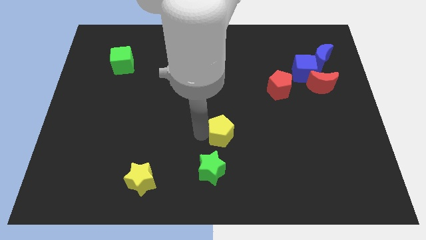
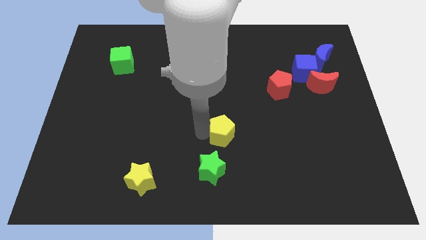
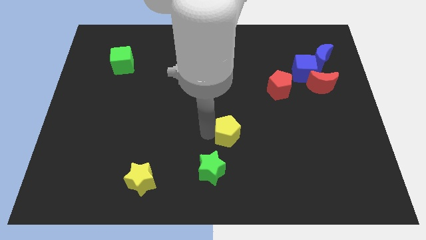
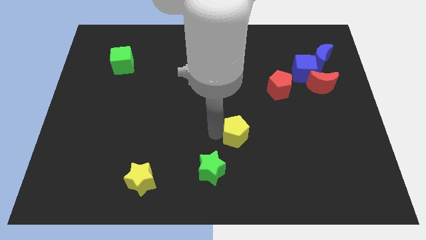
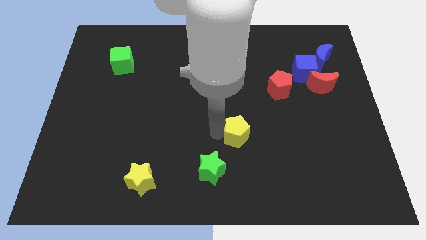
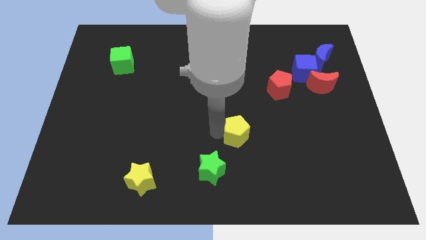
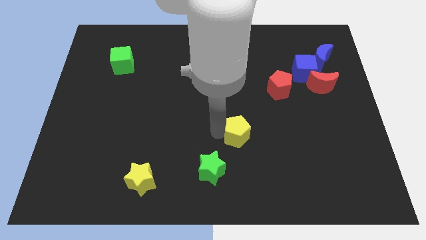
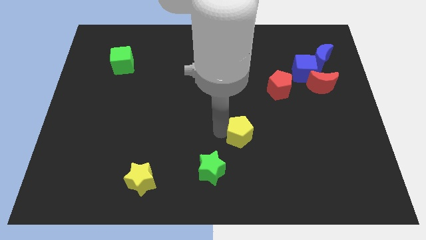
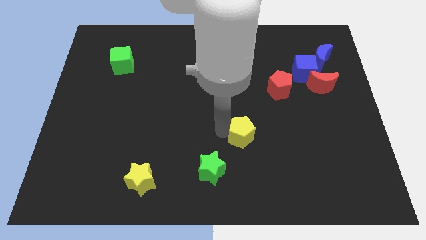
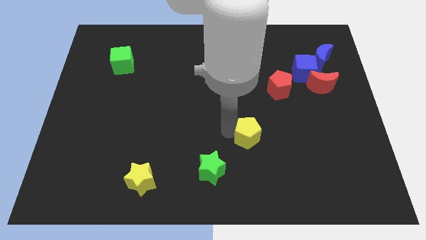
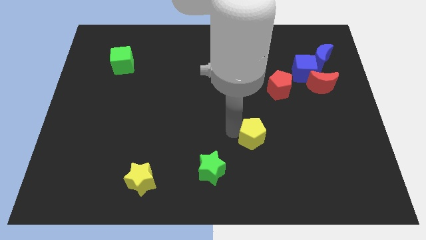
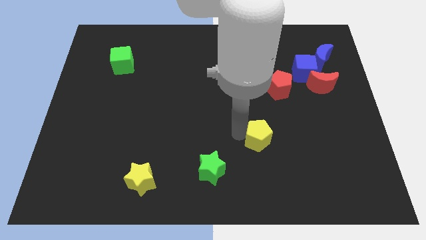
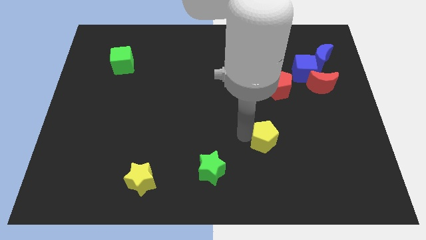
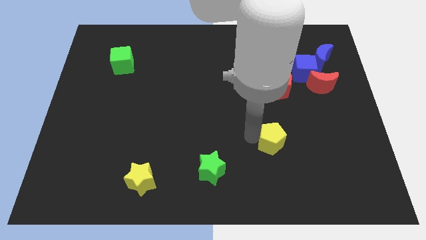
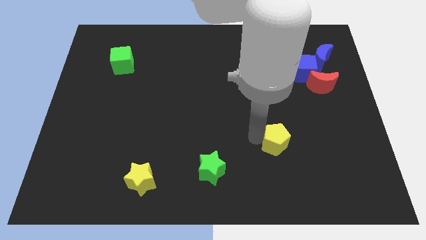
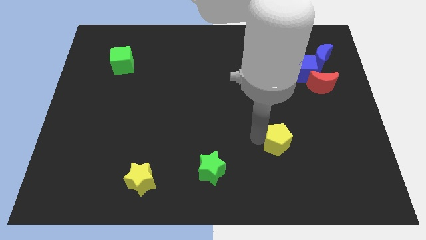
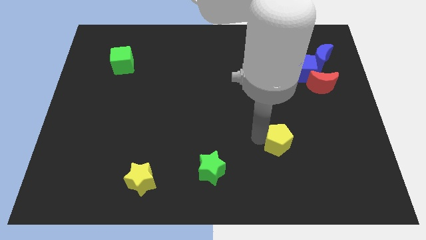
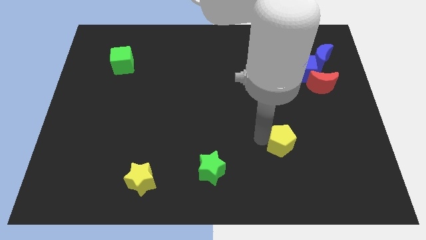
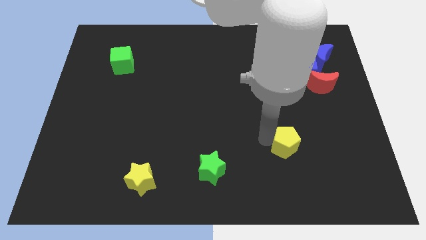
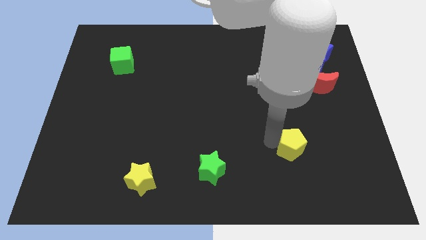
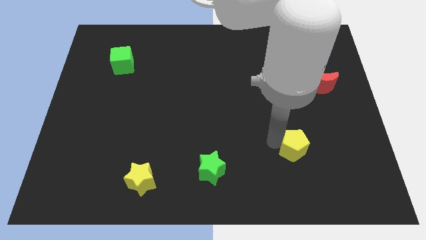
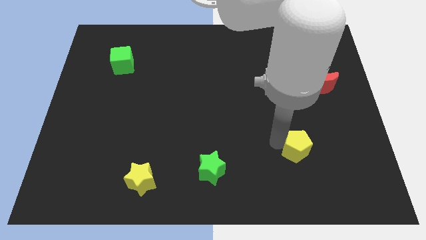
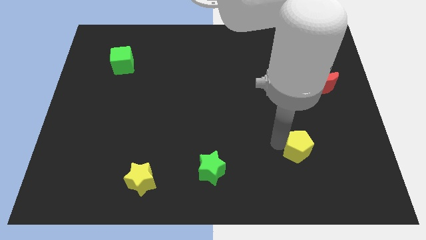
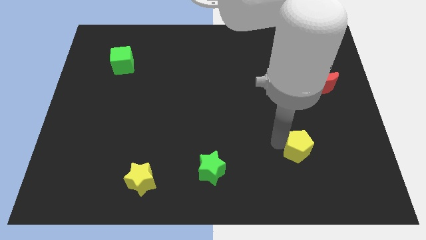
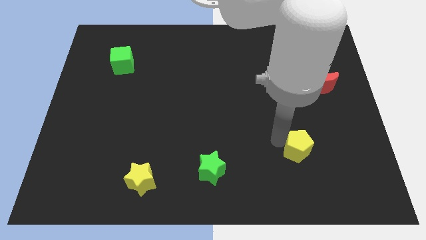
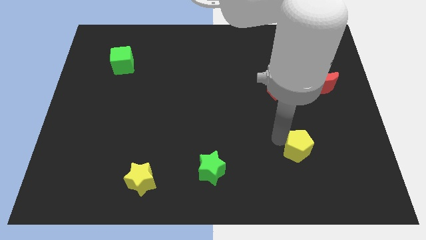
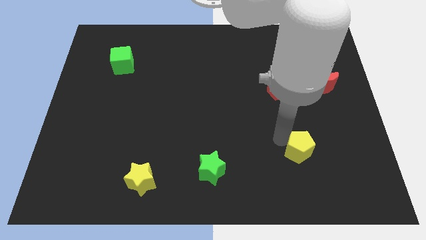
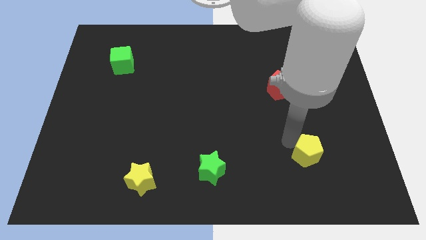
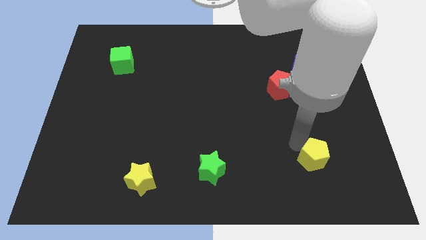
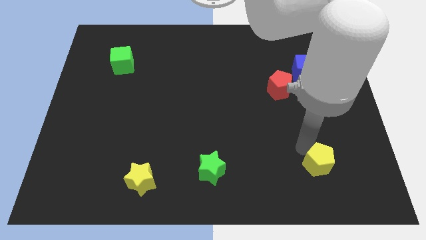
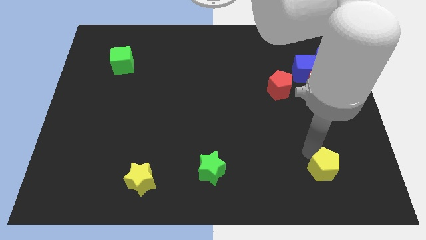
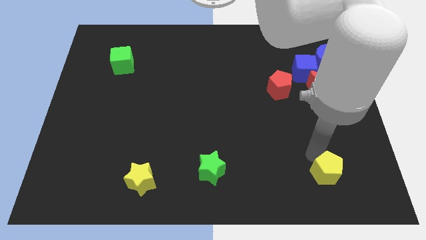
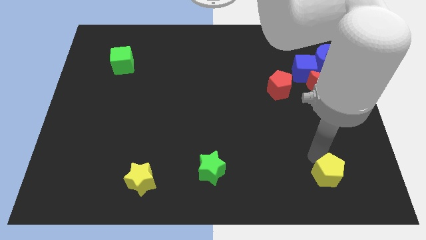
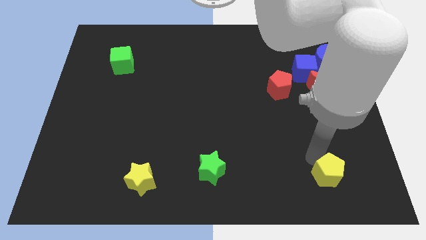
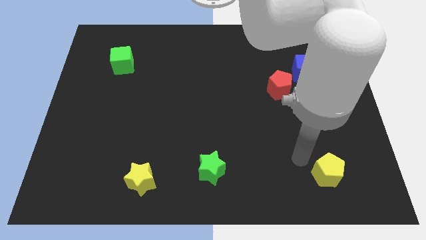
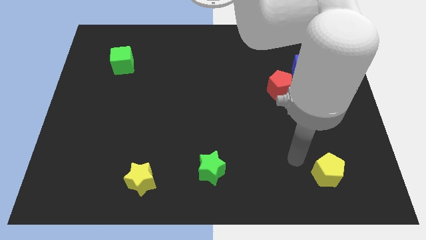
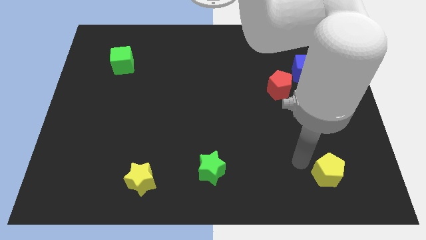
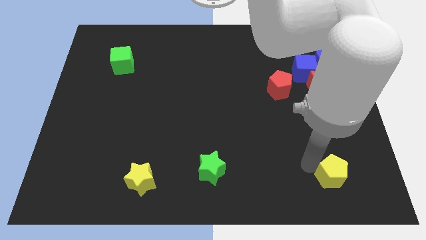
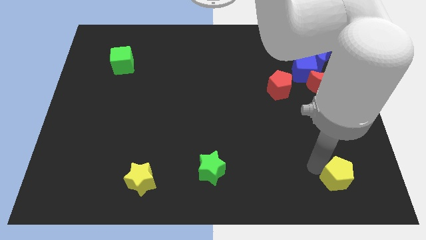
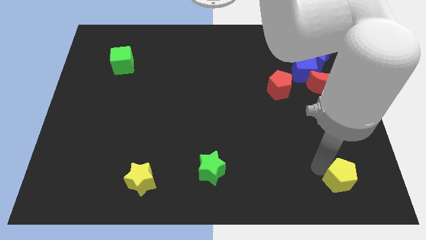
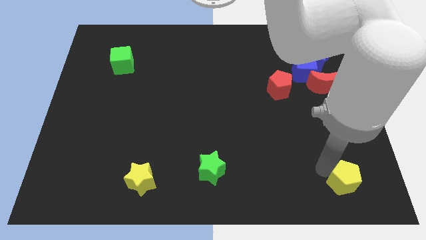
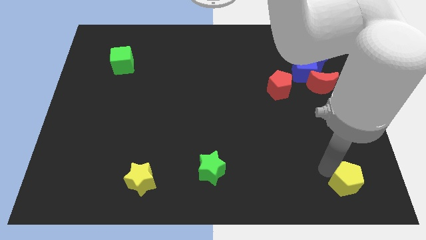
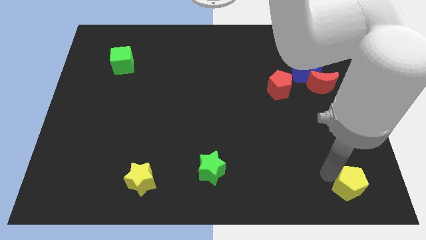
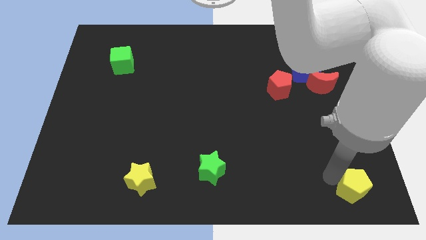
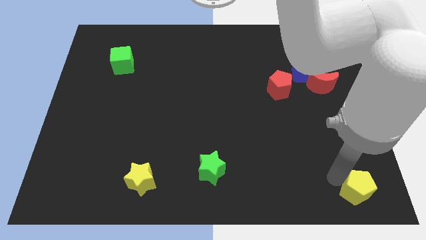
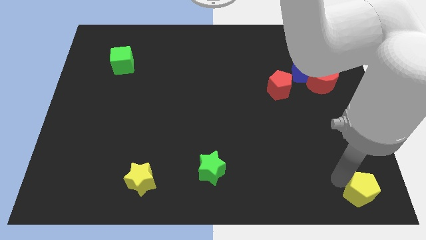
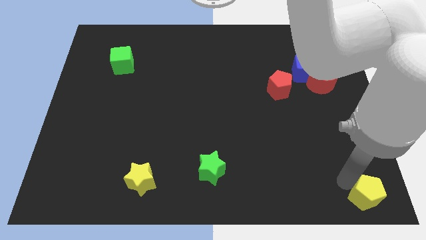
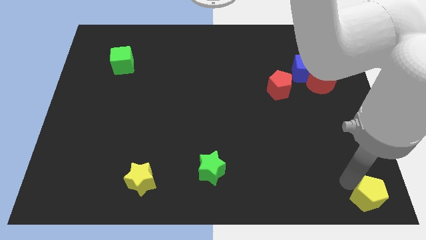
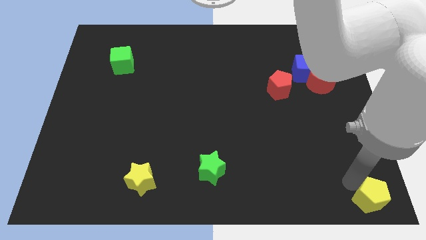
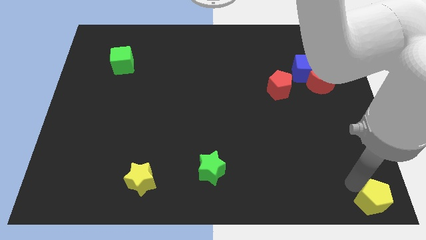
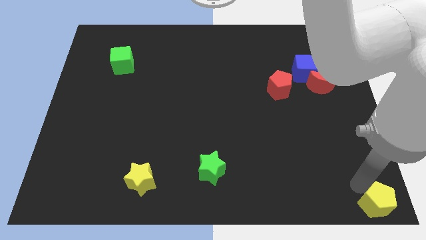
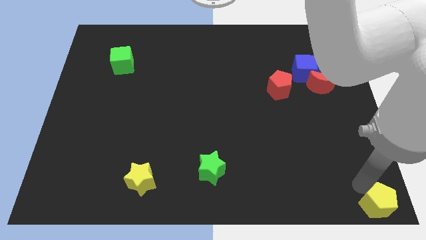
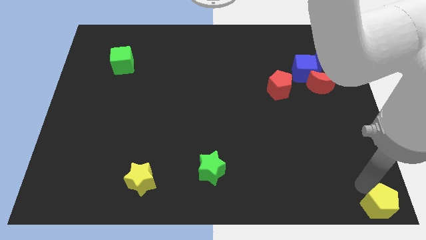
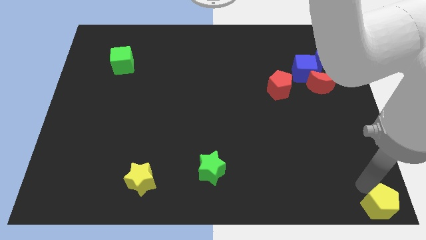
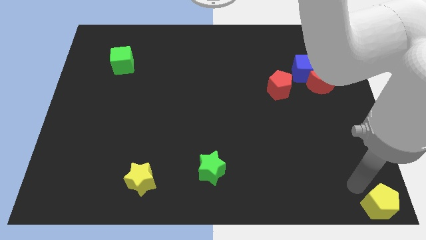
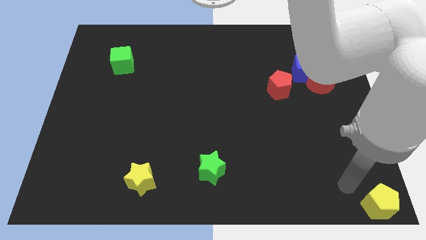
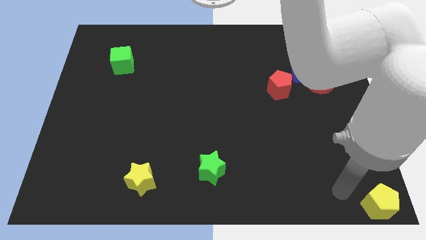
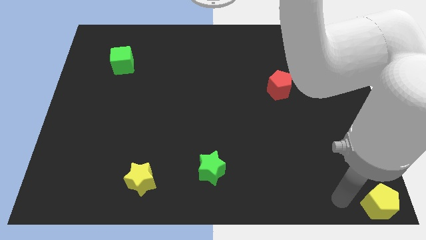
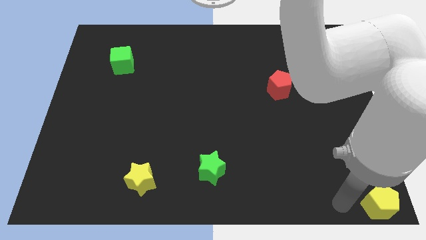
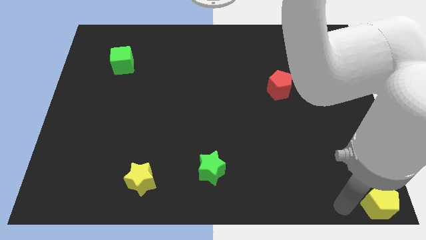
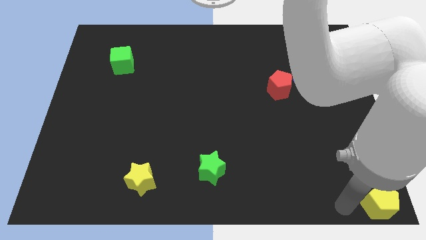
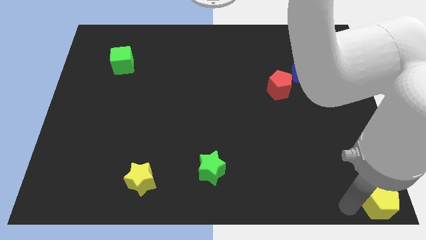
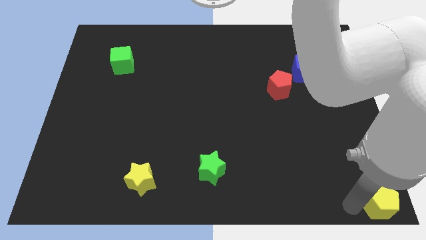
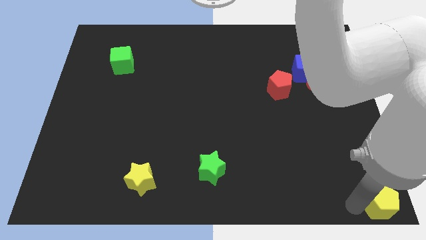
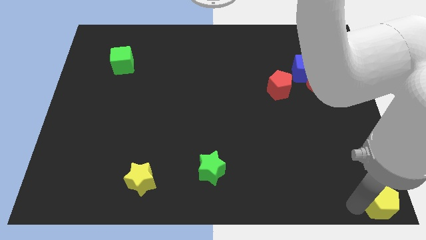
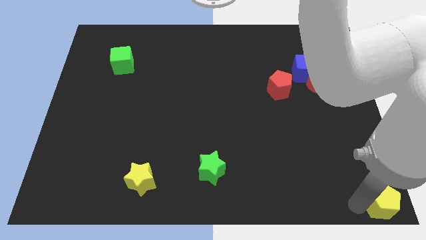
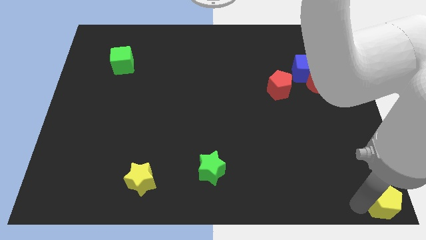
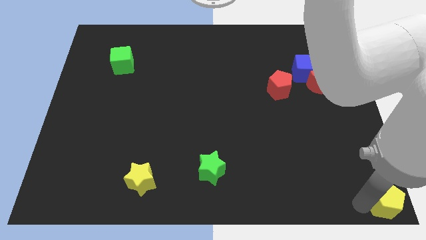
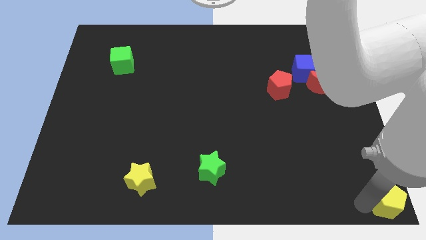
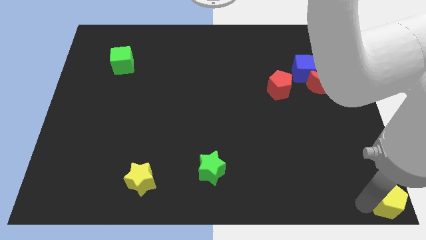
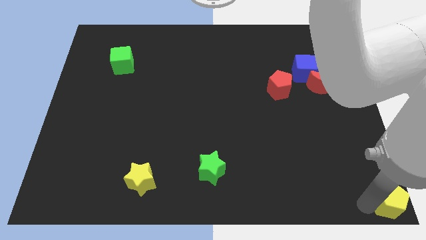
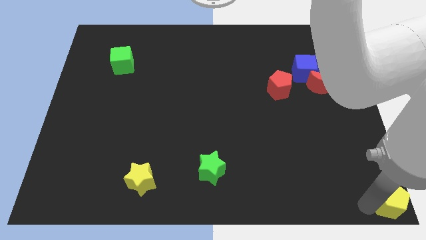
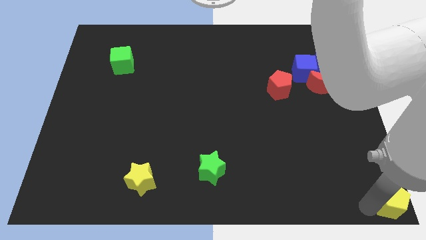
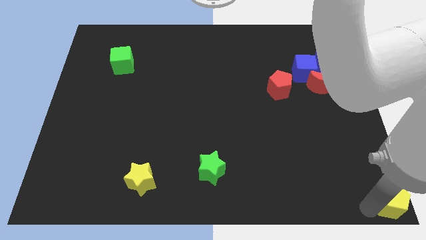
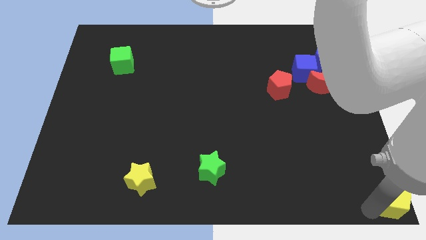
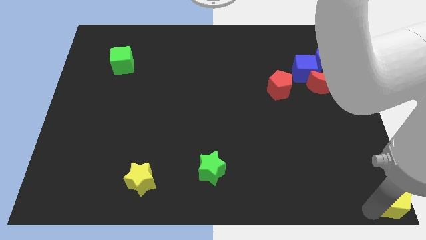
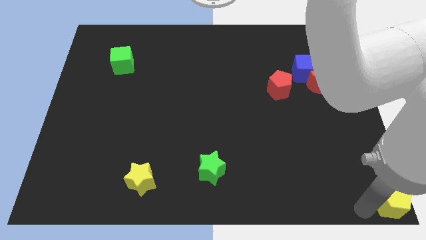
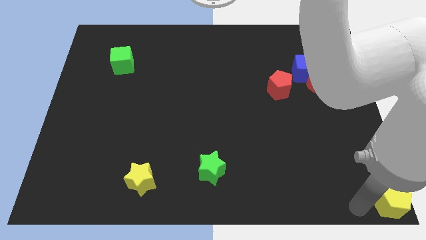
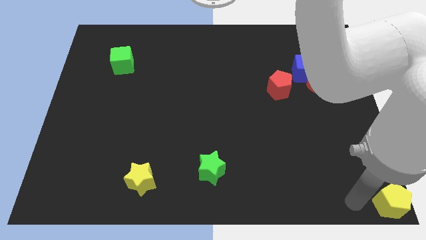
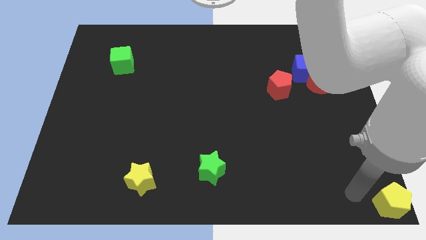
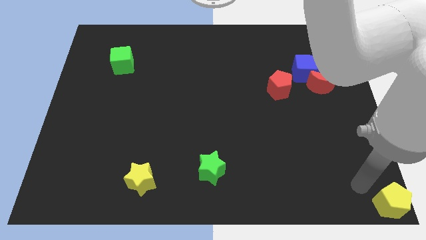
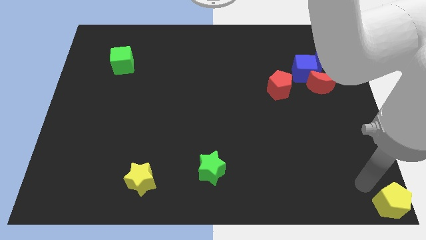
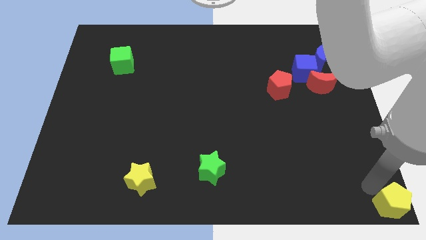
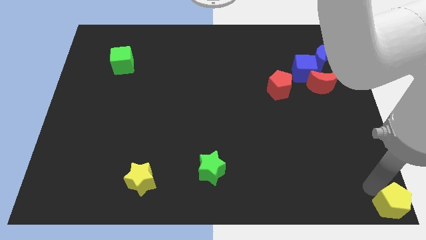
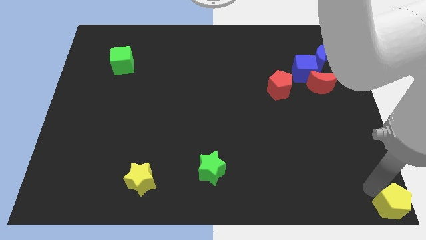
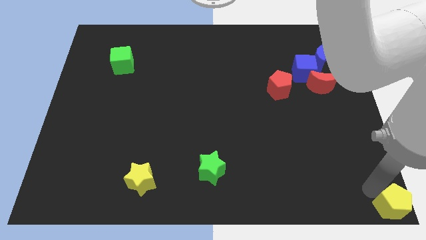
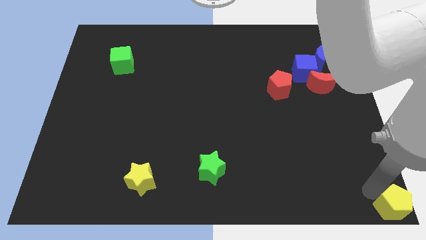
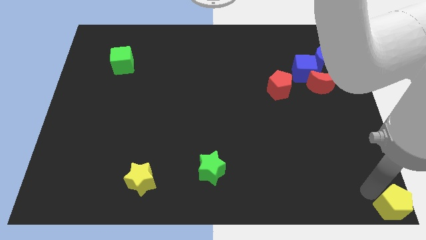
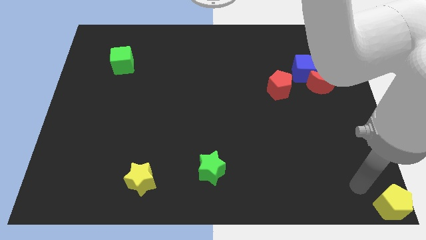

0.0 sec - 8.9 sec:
push the yellow pentagon to the bottom right corner of the board
